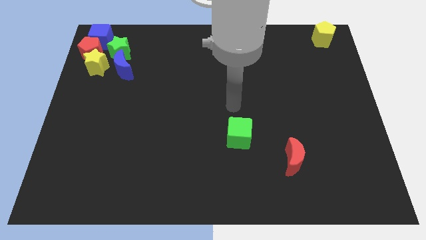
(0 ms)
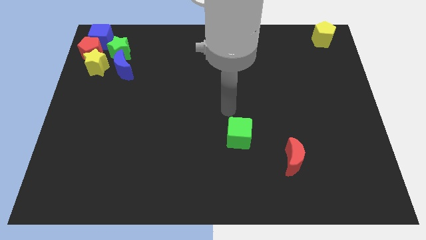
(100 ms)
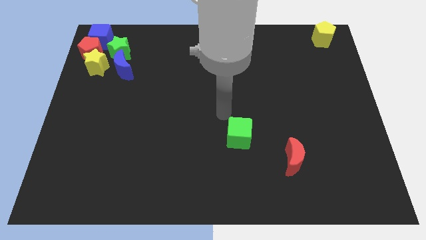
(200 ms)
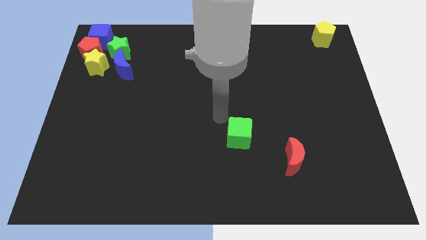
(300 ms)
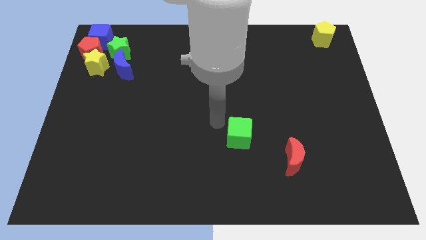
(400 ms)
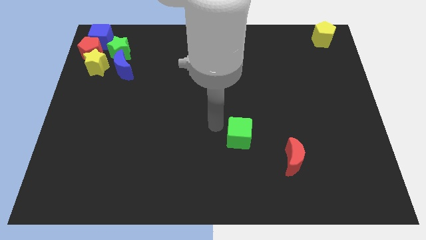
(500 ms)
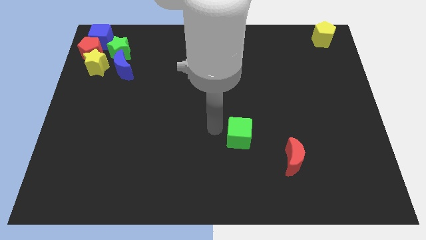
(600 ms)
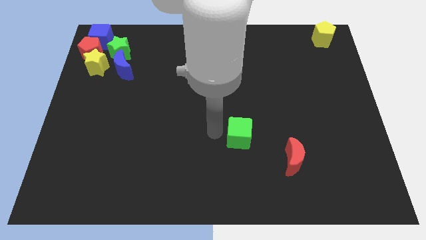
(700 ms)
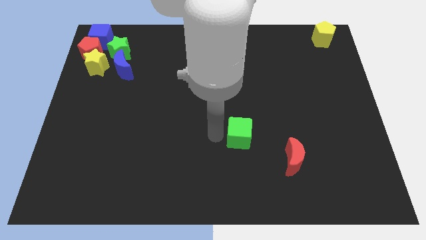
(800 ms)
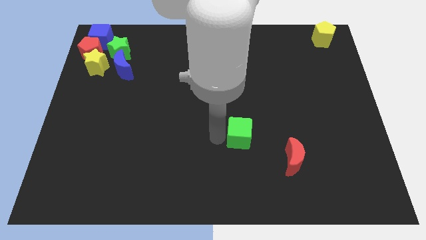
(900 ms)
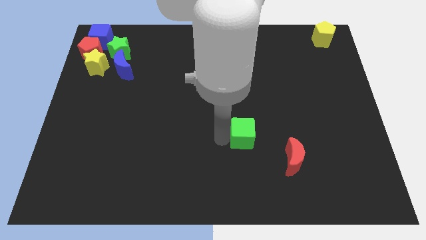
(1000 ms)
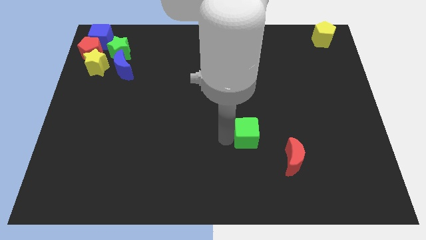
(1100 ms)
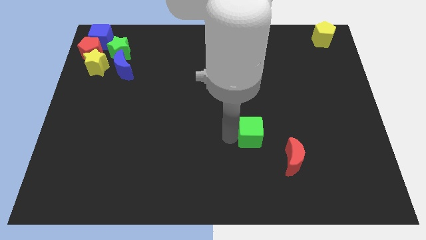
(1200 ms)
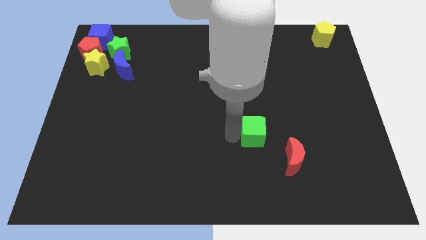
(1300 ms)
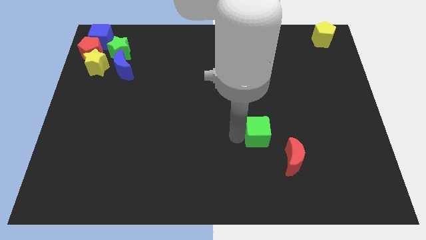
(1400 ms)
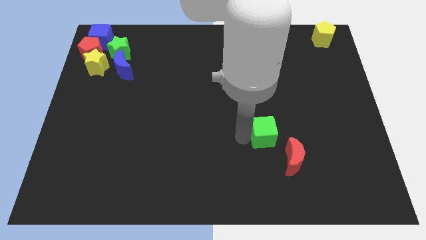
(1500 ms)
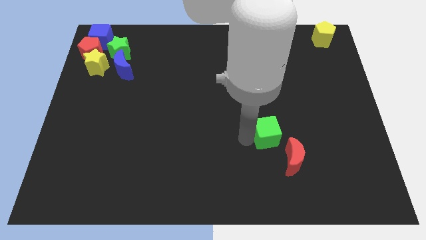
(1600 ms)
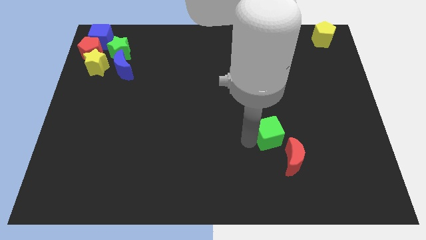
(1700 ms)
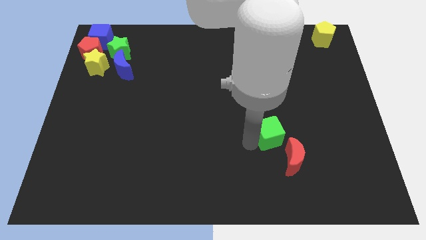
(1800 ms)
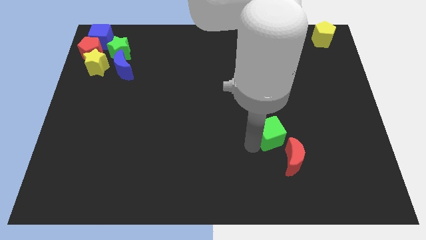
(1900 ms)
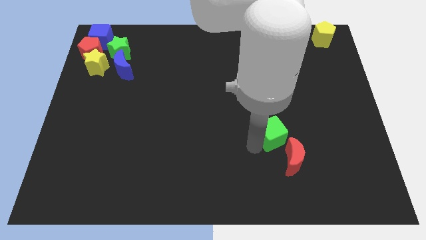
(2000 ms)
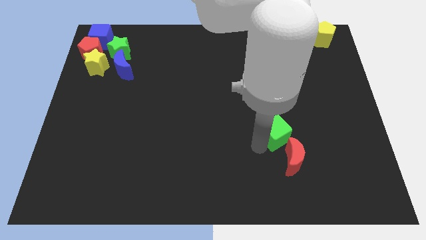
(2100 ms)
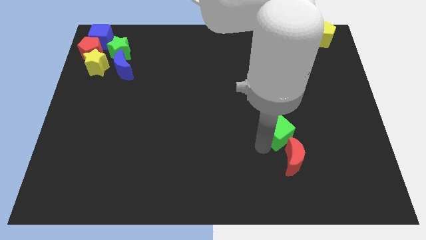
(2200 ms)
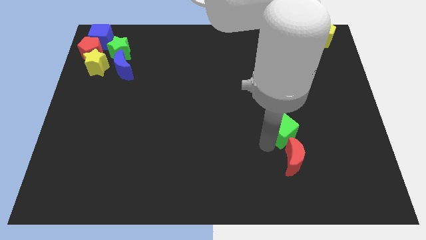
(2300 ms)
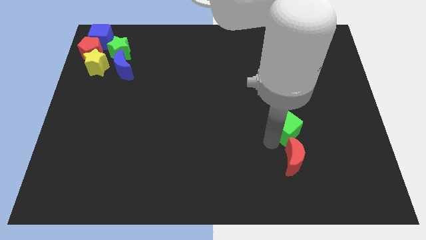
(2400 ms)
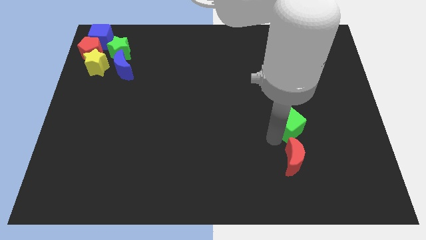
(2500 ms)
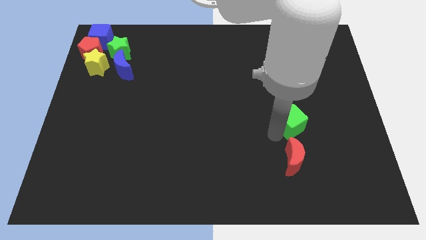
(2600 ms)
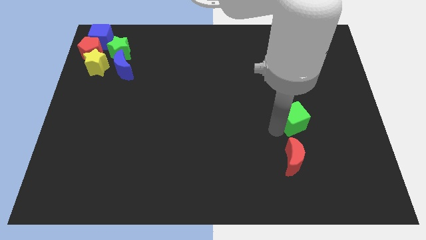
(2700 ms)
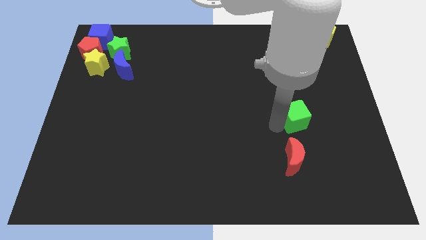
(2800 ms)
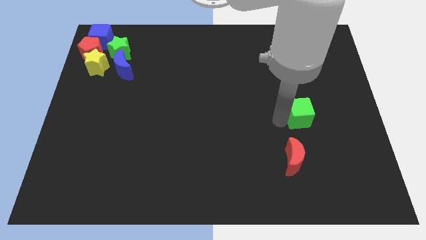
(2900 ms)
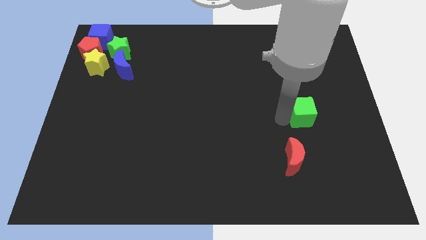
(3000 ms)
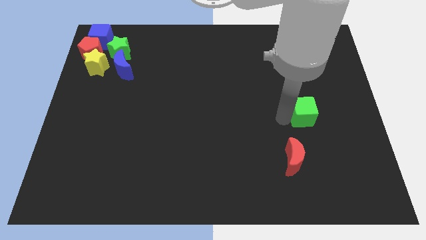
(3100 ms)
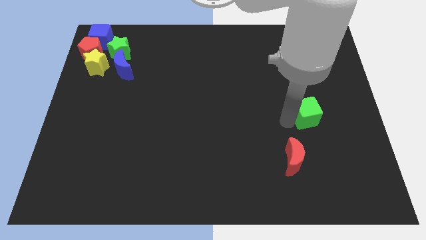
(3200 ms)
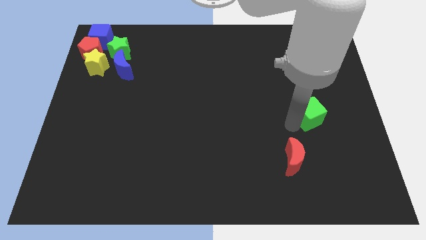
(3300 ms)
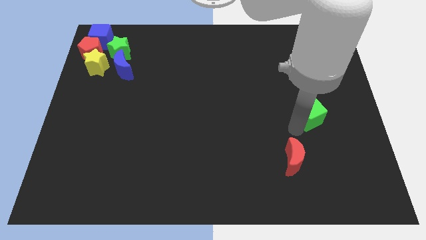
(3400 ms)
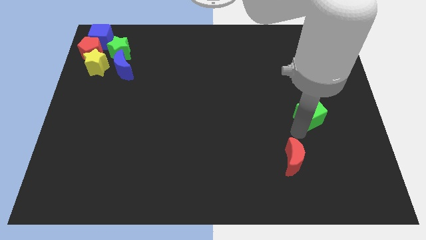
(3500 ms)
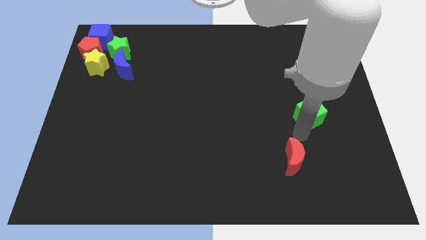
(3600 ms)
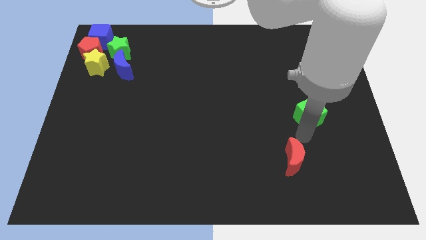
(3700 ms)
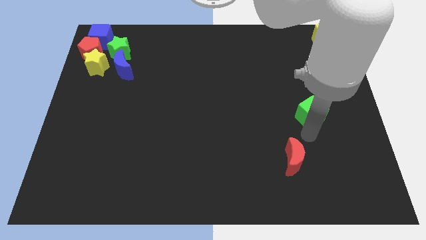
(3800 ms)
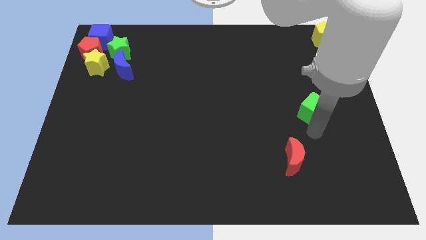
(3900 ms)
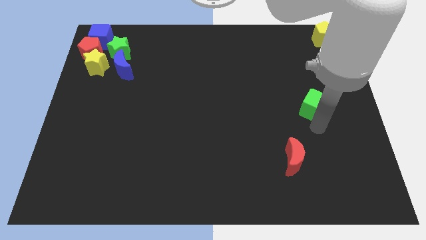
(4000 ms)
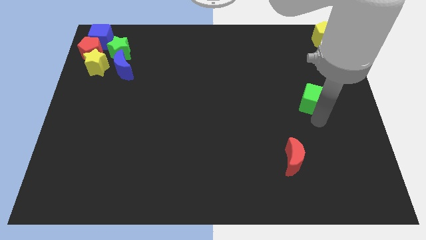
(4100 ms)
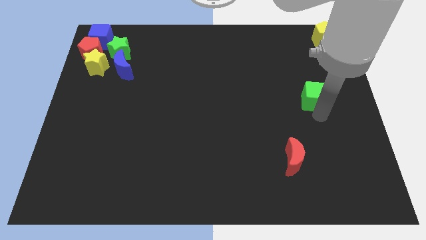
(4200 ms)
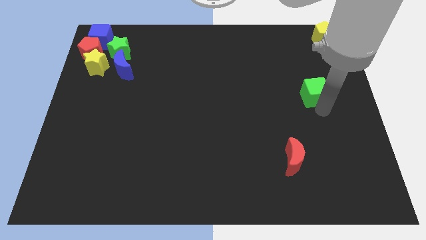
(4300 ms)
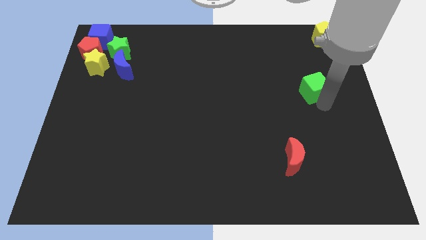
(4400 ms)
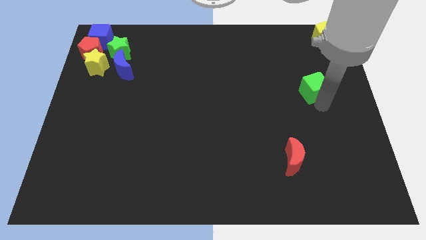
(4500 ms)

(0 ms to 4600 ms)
move the green cube between red moon and yellow pentagon

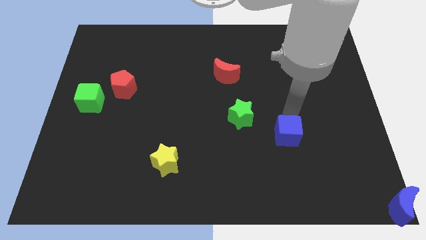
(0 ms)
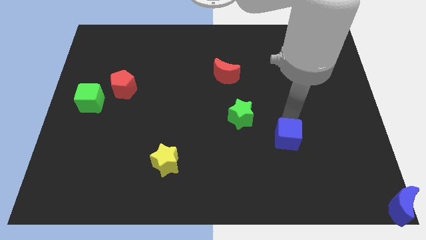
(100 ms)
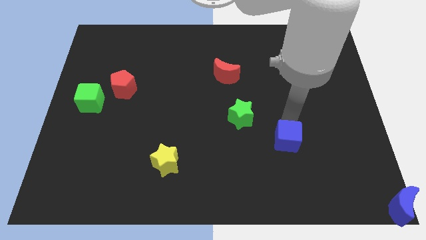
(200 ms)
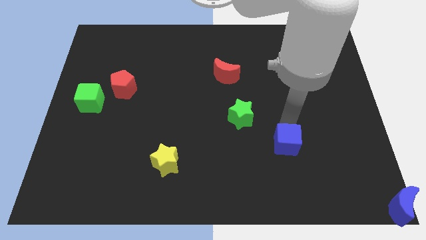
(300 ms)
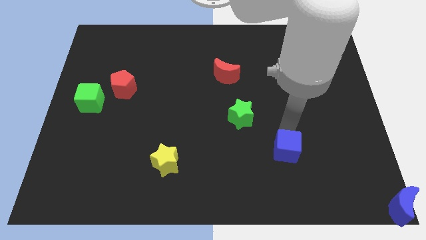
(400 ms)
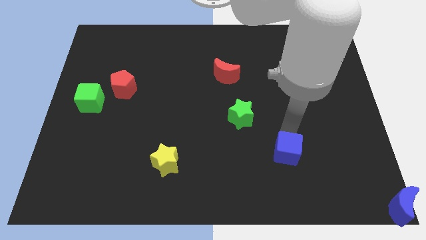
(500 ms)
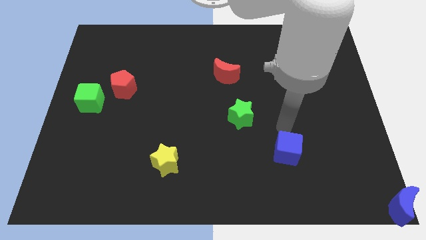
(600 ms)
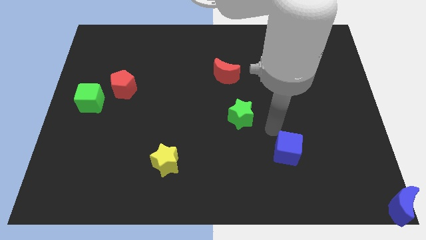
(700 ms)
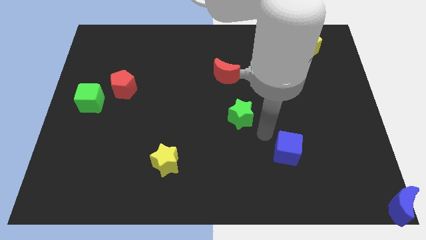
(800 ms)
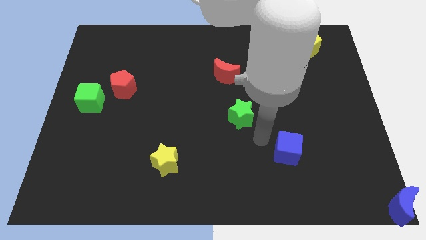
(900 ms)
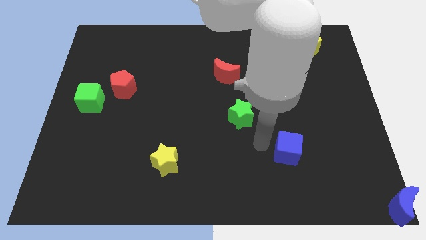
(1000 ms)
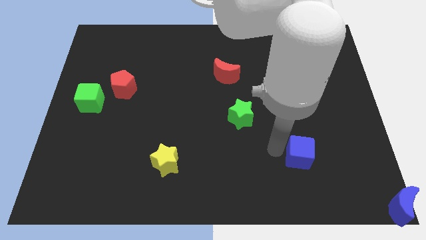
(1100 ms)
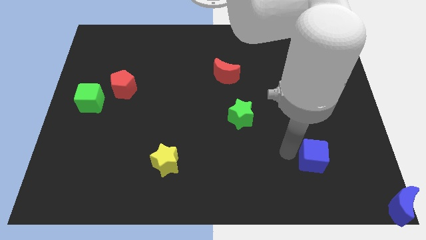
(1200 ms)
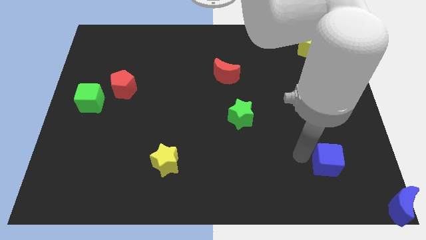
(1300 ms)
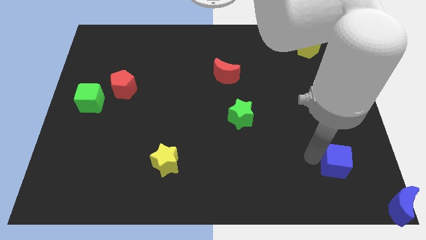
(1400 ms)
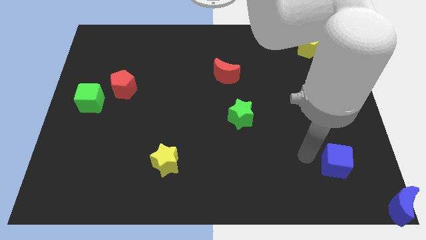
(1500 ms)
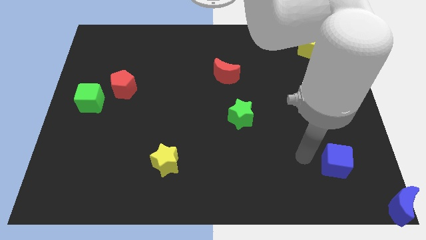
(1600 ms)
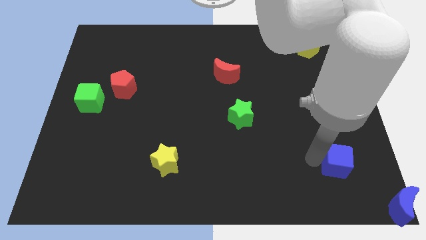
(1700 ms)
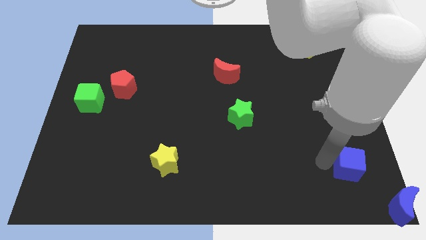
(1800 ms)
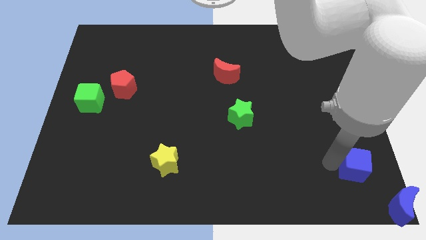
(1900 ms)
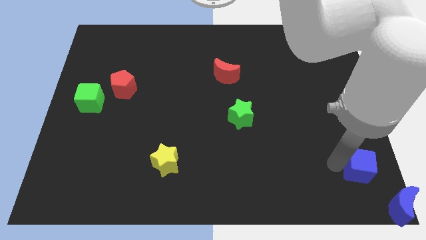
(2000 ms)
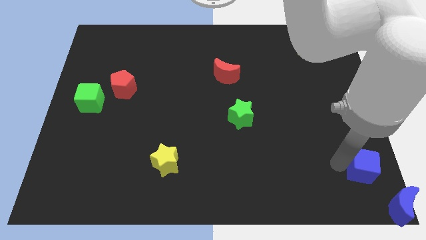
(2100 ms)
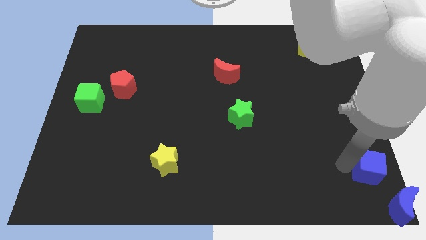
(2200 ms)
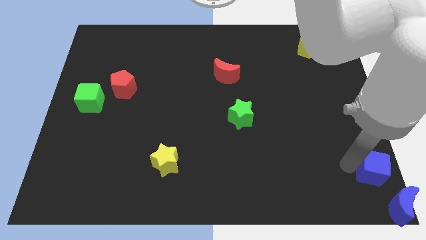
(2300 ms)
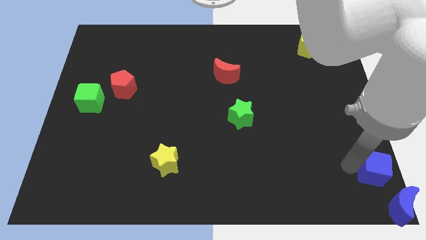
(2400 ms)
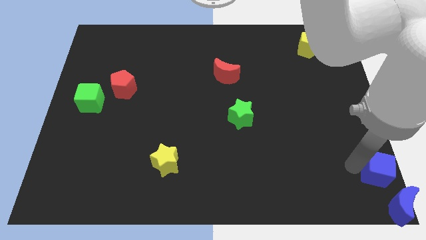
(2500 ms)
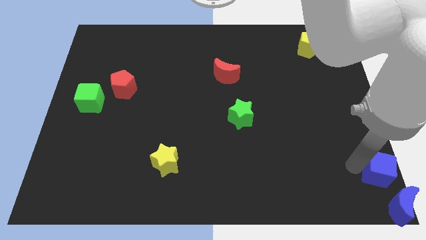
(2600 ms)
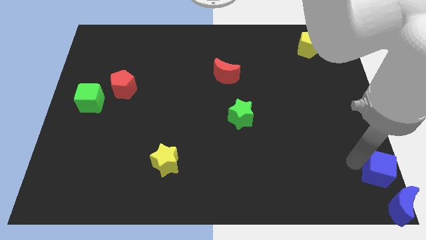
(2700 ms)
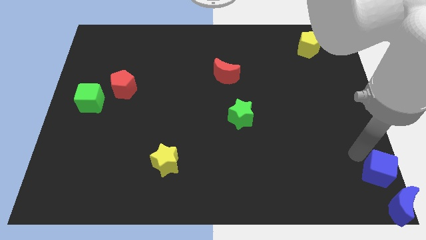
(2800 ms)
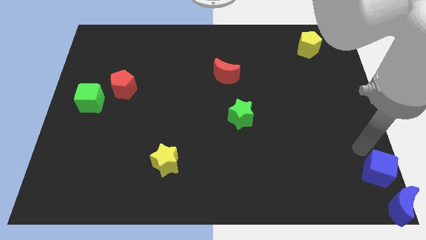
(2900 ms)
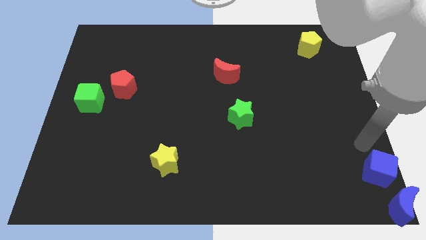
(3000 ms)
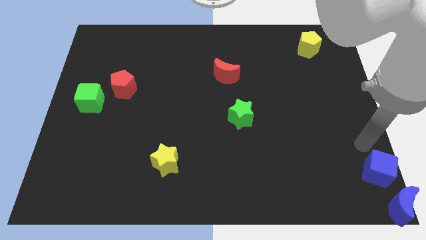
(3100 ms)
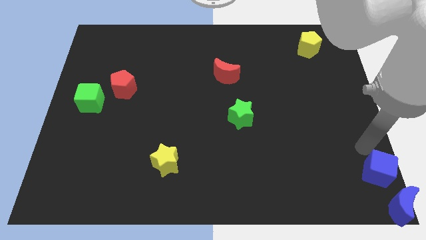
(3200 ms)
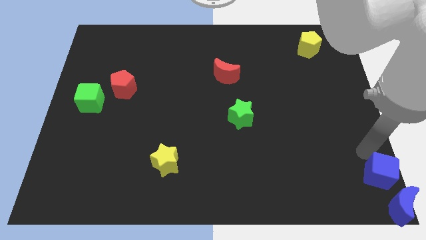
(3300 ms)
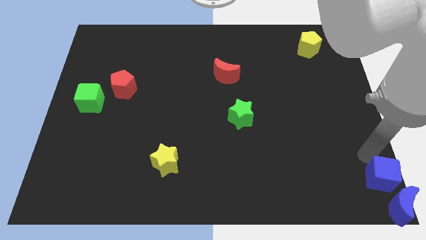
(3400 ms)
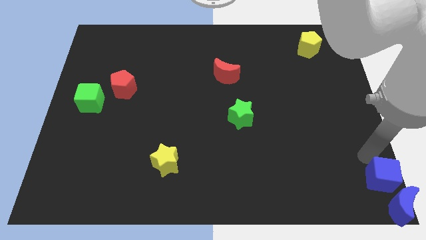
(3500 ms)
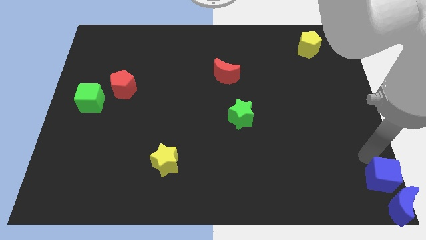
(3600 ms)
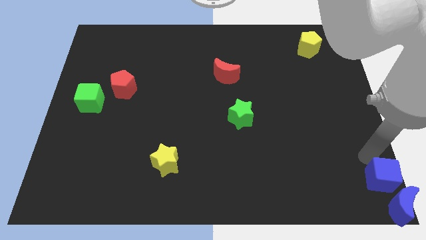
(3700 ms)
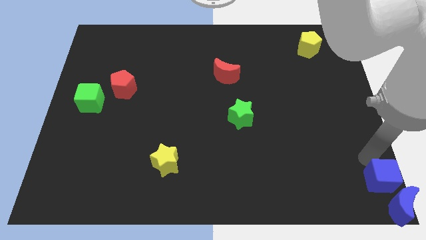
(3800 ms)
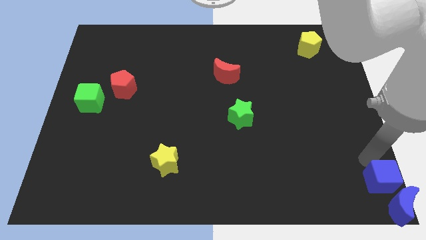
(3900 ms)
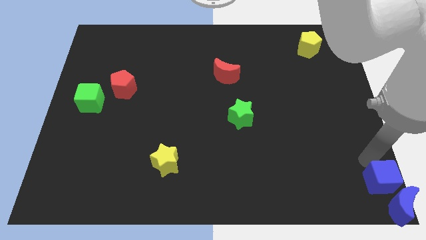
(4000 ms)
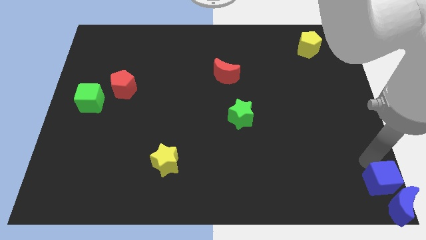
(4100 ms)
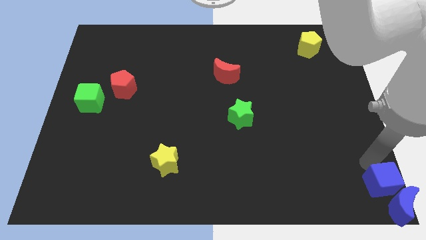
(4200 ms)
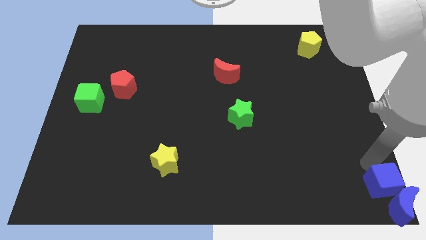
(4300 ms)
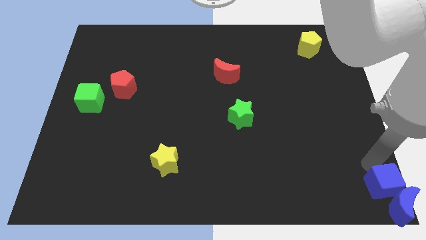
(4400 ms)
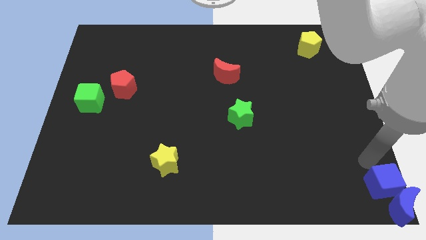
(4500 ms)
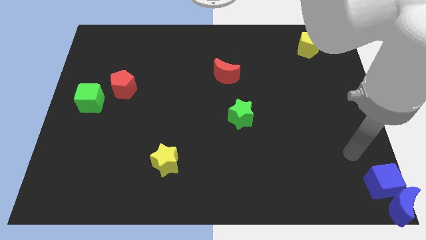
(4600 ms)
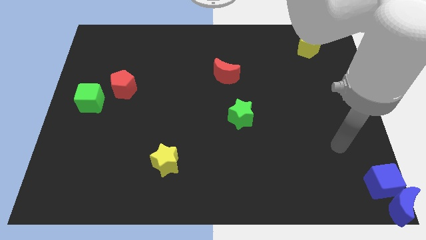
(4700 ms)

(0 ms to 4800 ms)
push the blue cube into the blue crescent
